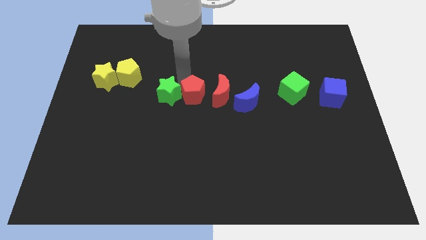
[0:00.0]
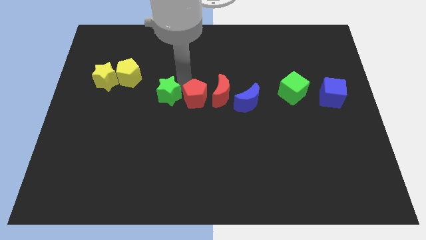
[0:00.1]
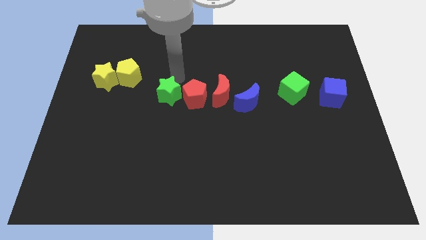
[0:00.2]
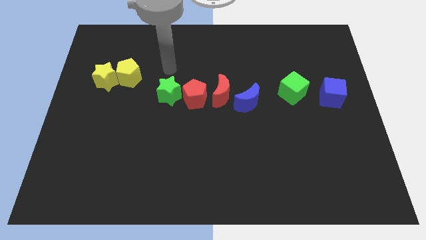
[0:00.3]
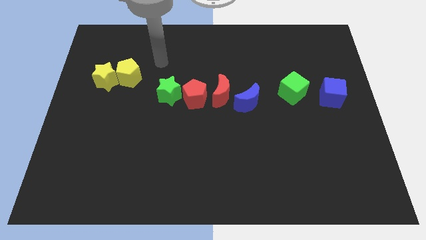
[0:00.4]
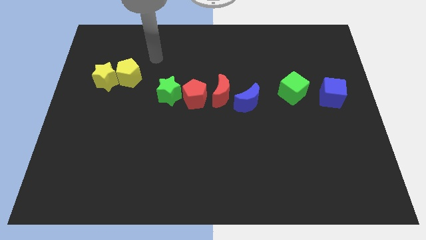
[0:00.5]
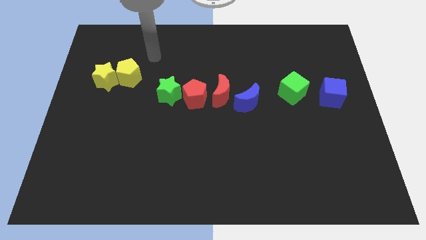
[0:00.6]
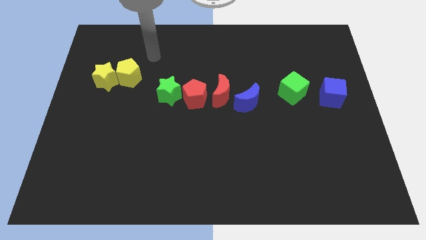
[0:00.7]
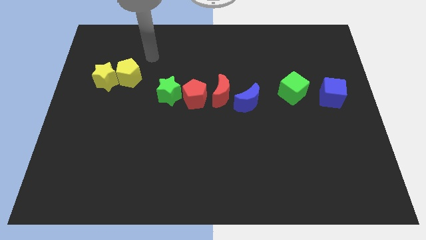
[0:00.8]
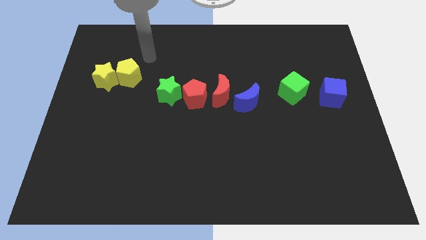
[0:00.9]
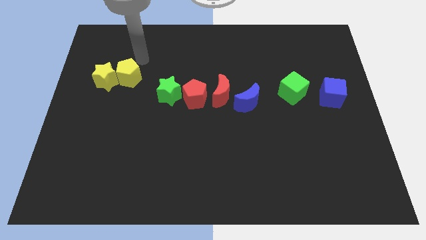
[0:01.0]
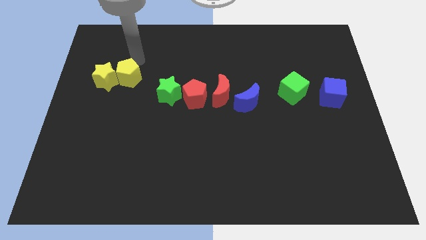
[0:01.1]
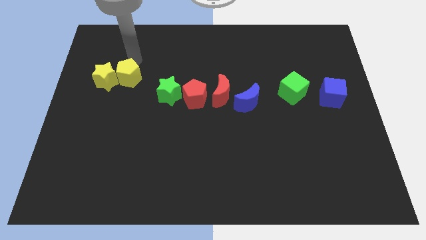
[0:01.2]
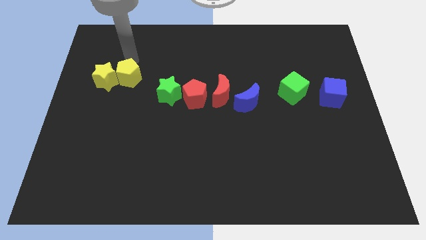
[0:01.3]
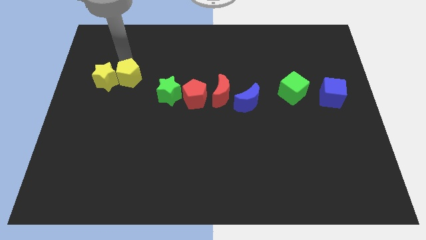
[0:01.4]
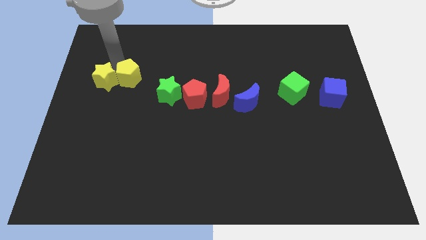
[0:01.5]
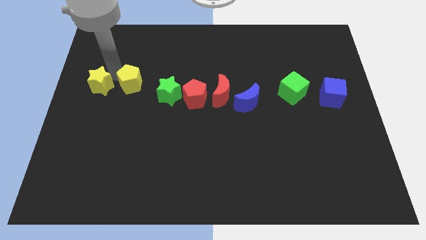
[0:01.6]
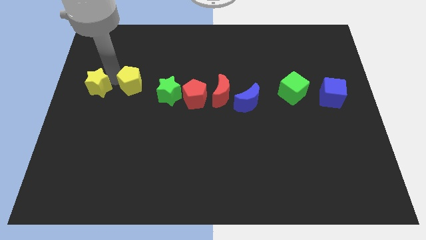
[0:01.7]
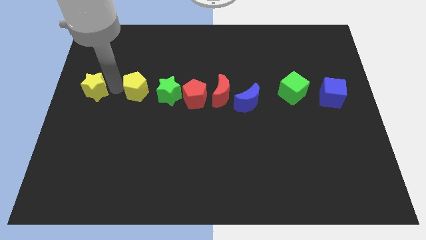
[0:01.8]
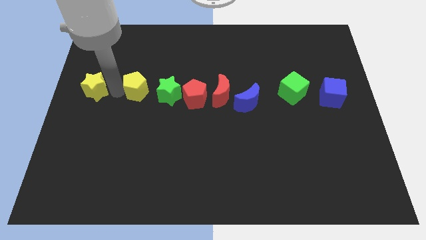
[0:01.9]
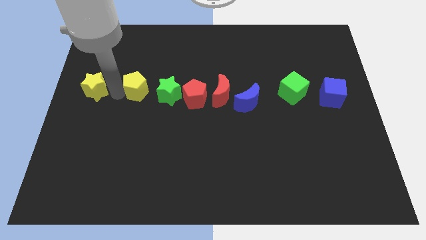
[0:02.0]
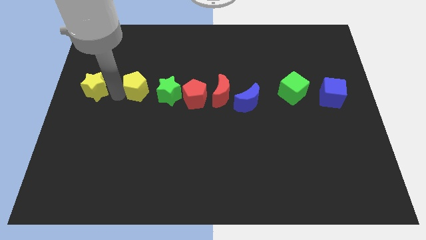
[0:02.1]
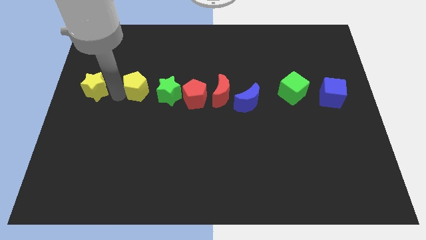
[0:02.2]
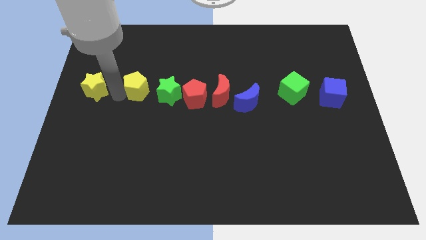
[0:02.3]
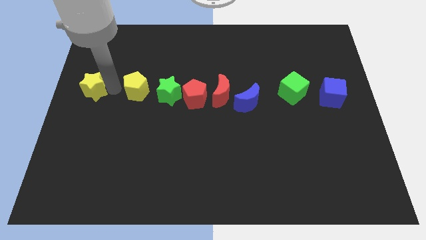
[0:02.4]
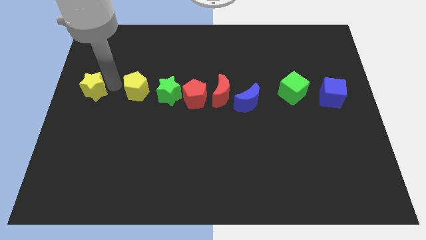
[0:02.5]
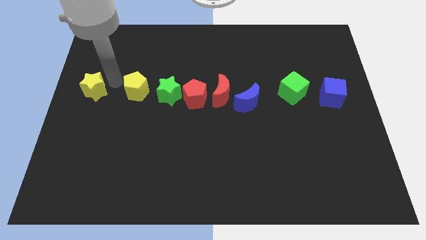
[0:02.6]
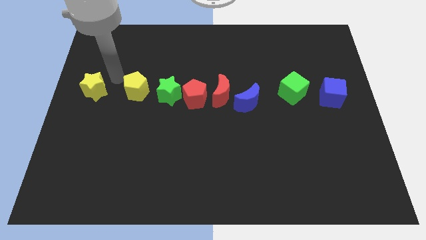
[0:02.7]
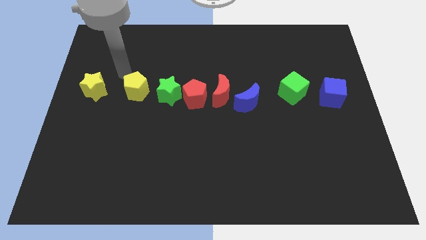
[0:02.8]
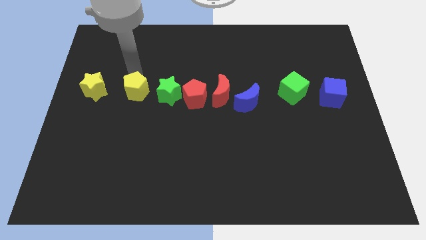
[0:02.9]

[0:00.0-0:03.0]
separate the group of yellow blocks from each other

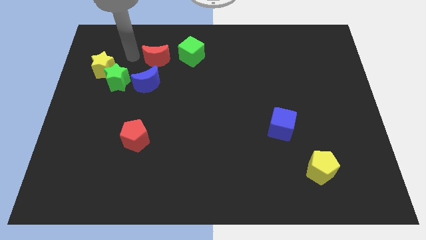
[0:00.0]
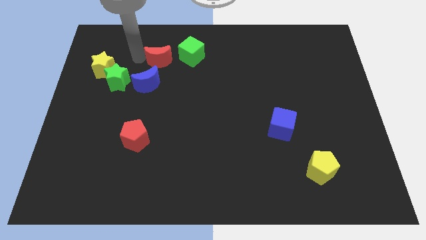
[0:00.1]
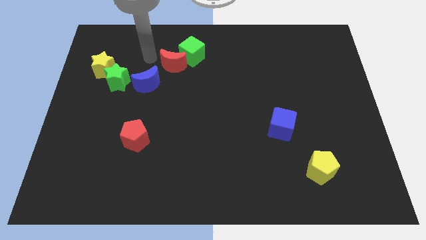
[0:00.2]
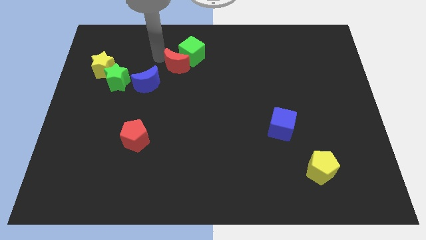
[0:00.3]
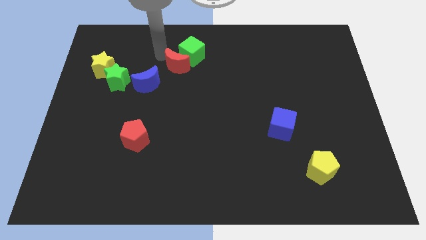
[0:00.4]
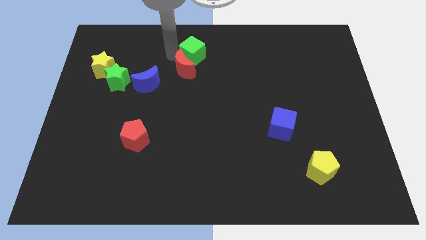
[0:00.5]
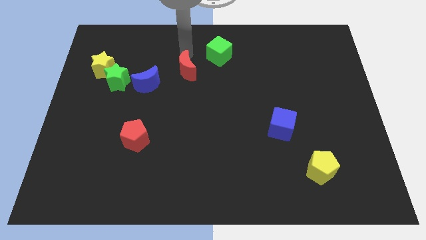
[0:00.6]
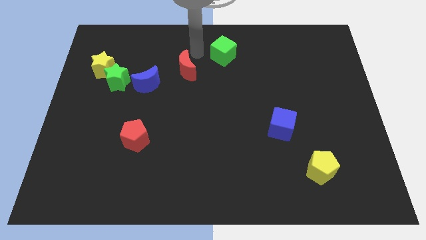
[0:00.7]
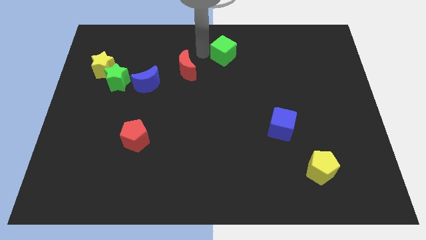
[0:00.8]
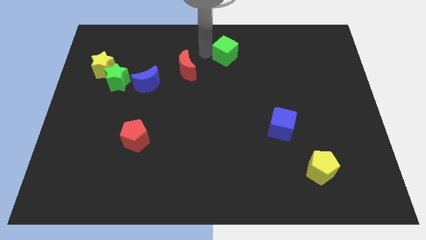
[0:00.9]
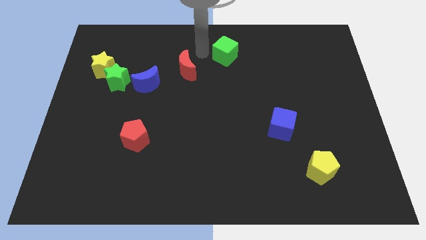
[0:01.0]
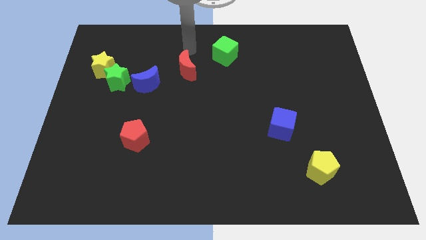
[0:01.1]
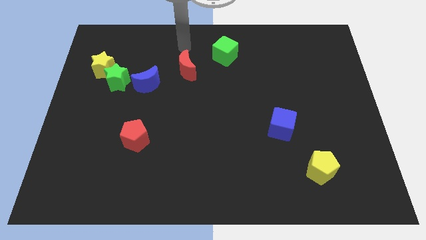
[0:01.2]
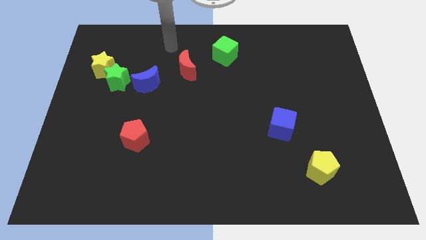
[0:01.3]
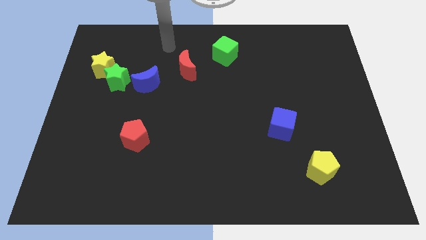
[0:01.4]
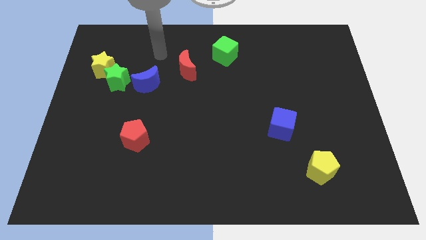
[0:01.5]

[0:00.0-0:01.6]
move green cube slightly right

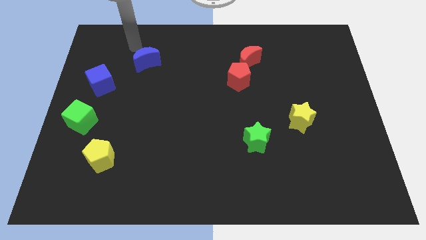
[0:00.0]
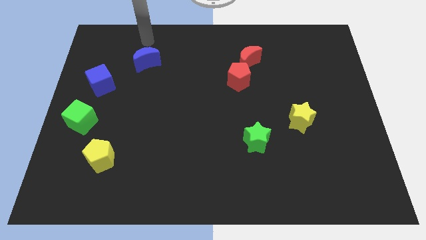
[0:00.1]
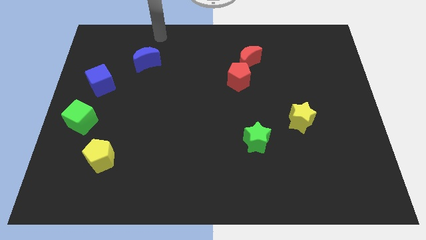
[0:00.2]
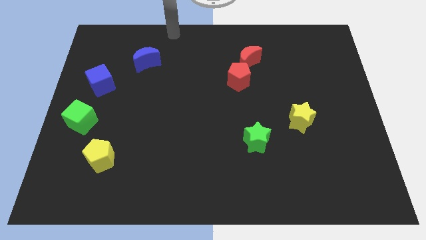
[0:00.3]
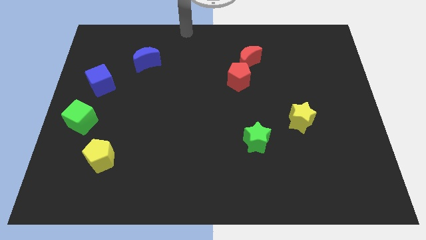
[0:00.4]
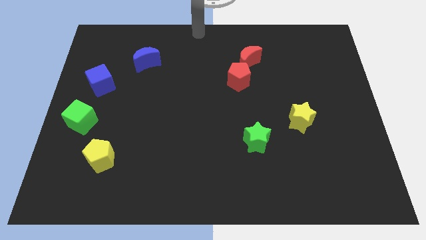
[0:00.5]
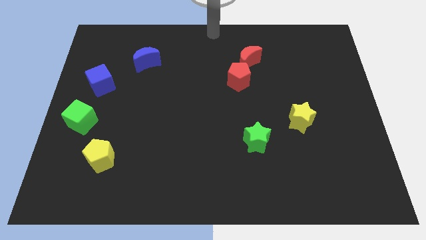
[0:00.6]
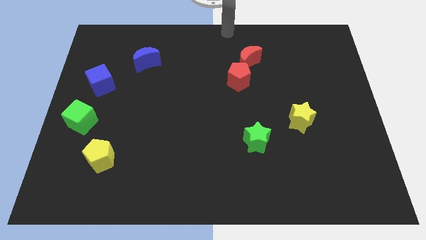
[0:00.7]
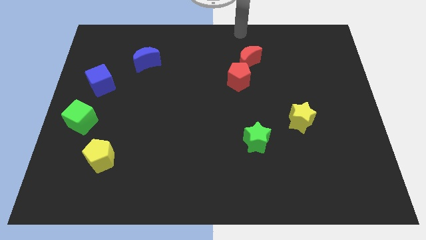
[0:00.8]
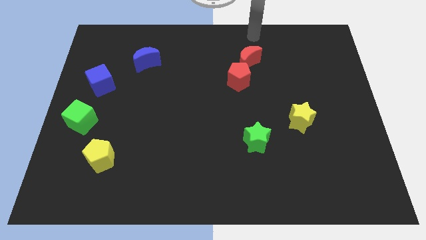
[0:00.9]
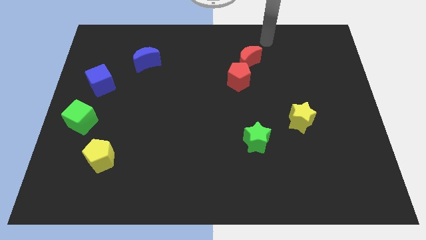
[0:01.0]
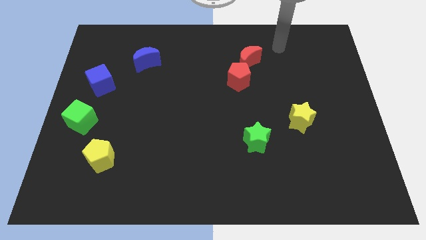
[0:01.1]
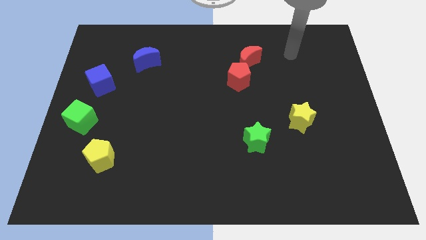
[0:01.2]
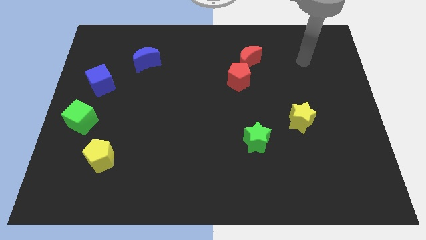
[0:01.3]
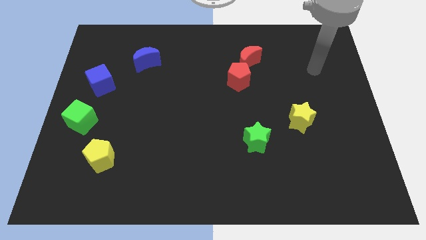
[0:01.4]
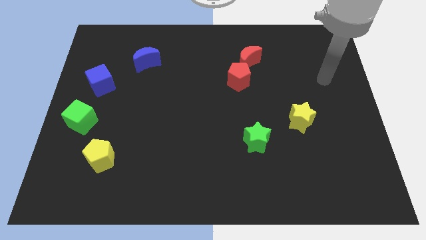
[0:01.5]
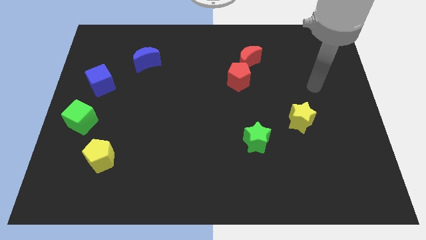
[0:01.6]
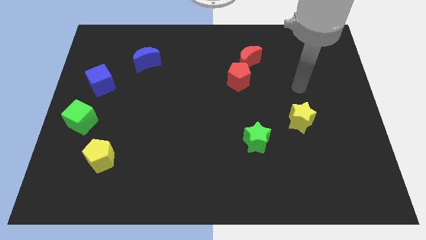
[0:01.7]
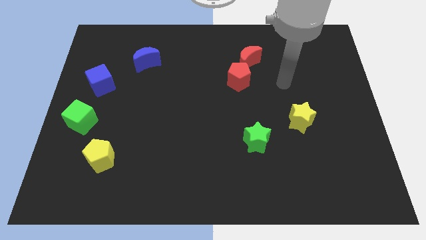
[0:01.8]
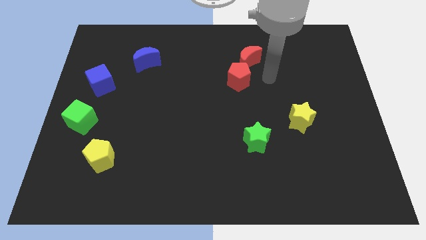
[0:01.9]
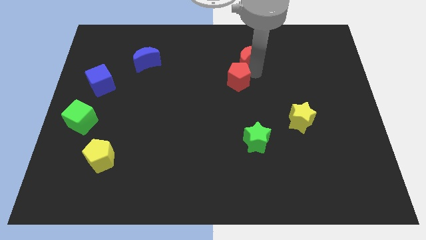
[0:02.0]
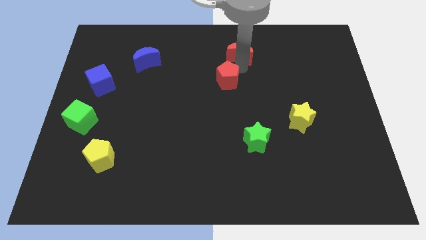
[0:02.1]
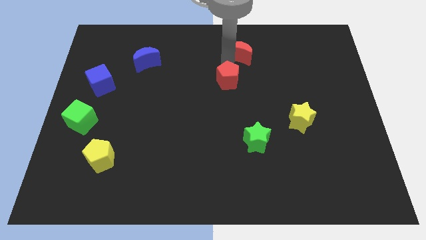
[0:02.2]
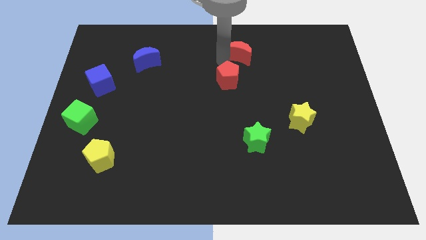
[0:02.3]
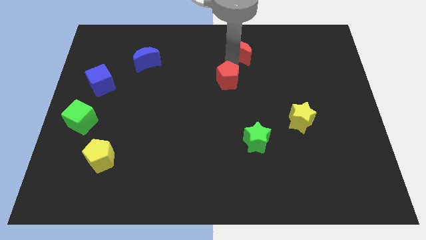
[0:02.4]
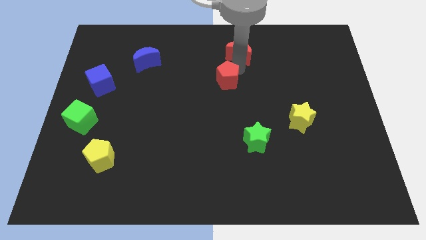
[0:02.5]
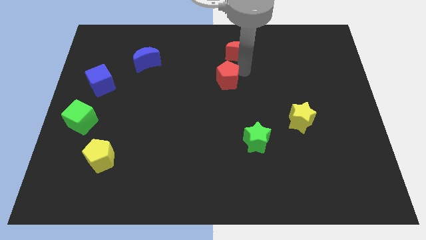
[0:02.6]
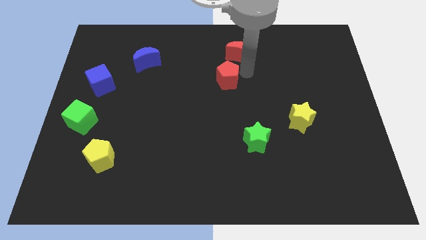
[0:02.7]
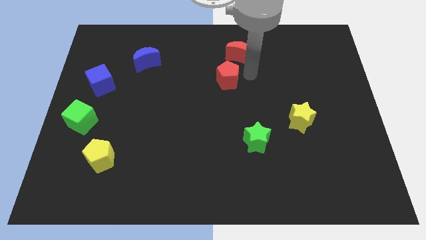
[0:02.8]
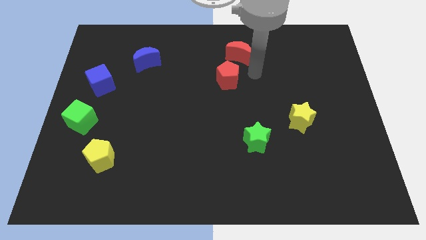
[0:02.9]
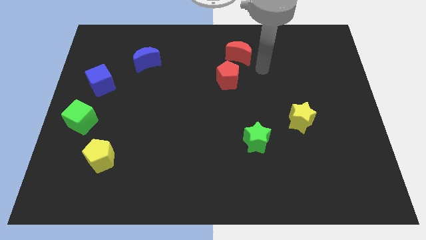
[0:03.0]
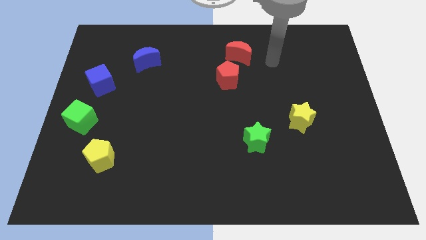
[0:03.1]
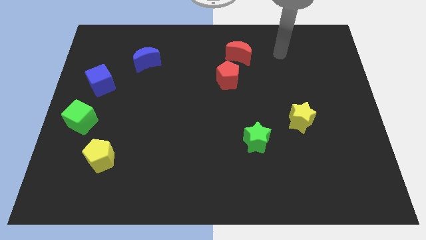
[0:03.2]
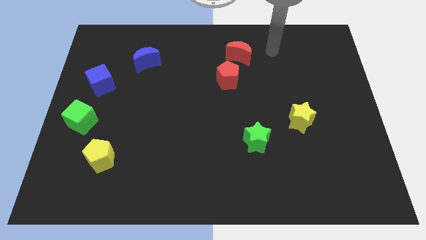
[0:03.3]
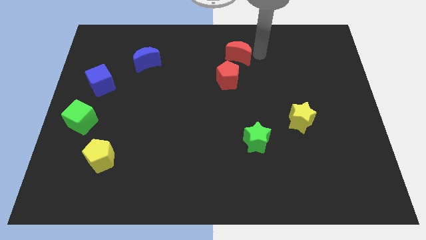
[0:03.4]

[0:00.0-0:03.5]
separate the red creescent from the red pentagon

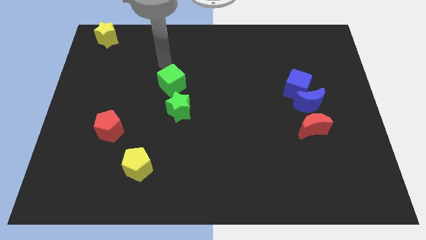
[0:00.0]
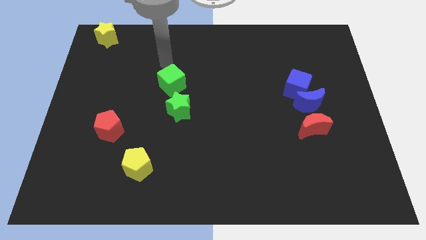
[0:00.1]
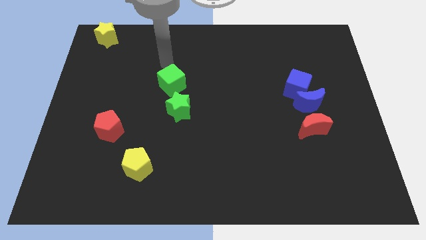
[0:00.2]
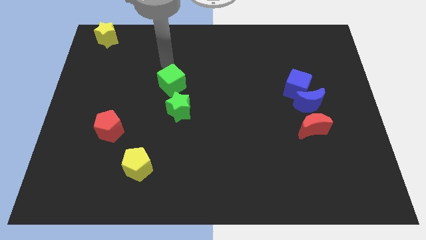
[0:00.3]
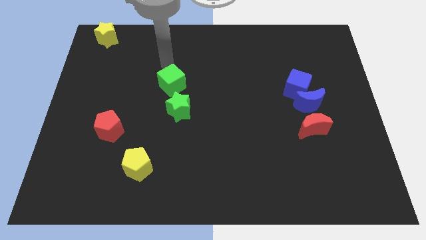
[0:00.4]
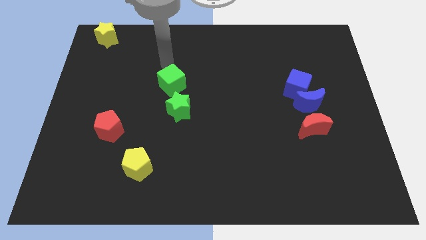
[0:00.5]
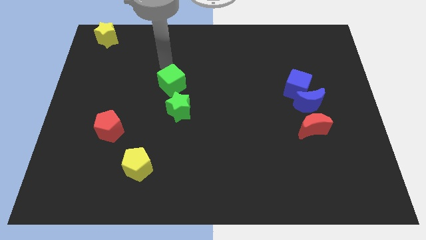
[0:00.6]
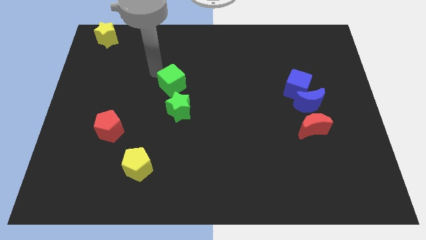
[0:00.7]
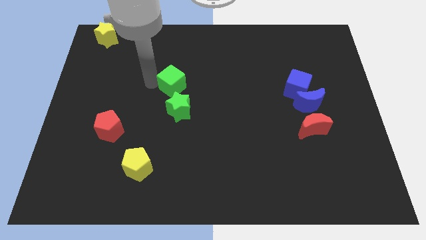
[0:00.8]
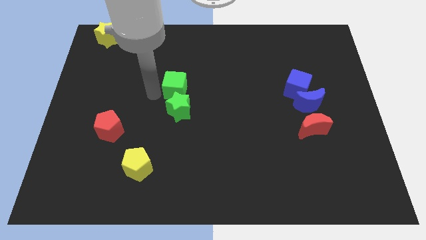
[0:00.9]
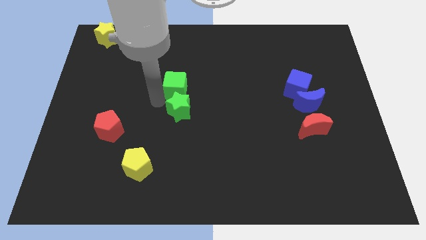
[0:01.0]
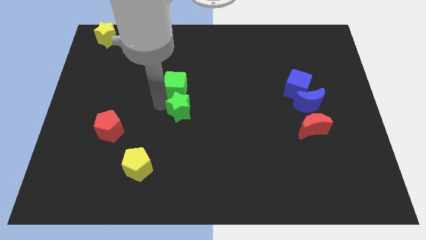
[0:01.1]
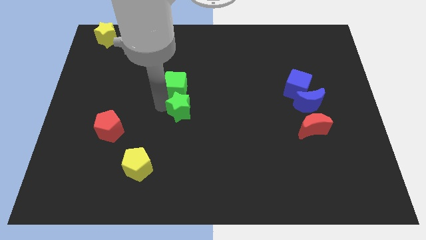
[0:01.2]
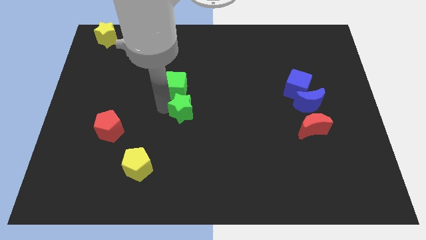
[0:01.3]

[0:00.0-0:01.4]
move the green cube to the top of the green star
